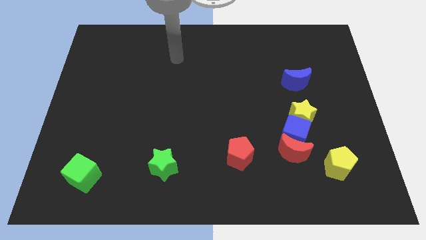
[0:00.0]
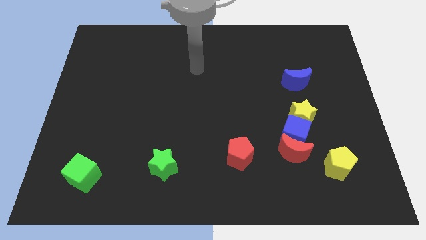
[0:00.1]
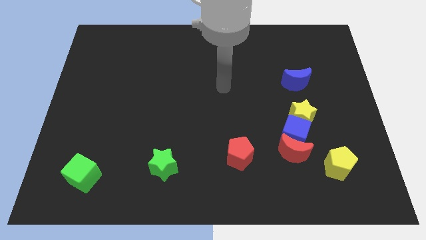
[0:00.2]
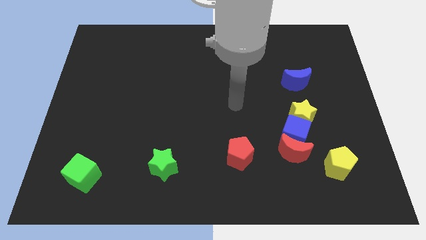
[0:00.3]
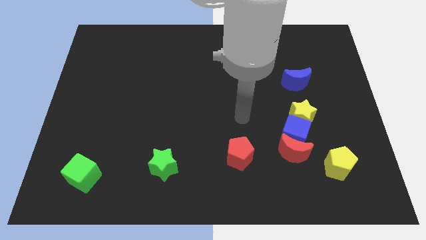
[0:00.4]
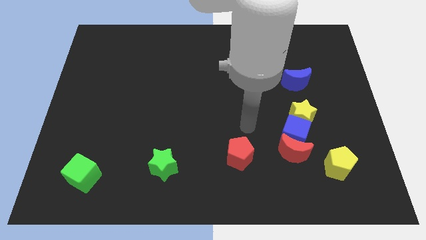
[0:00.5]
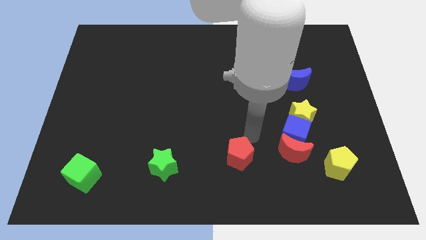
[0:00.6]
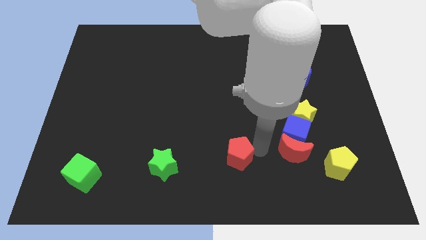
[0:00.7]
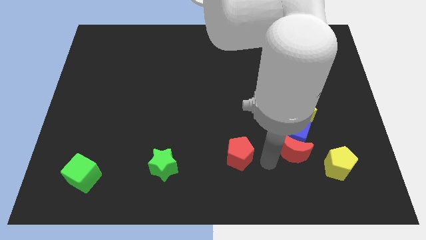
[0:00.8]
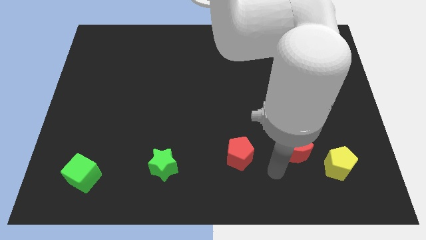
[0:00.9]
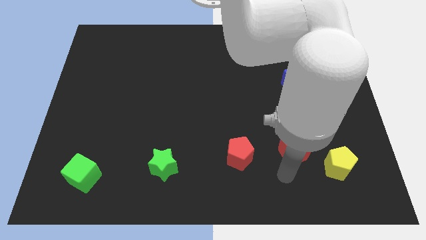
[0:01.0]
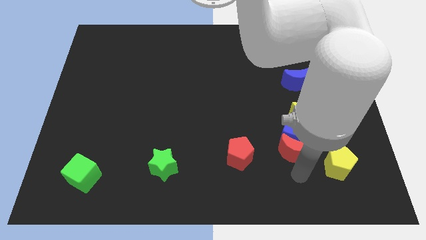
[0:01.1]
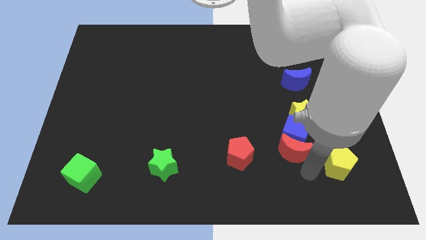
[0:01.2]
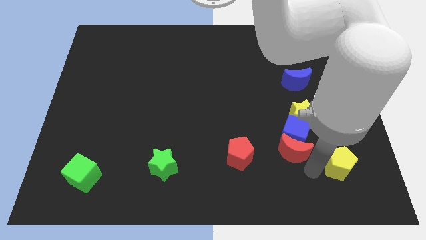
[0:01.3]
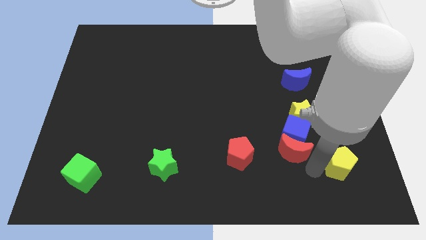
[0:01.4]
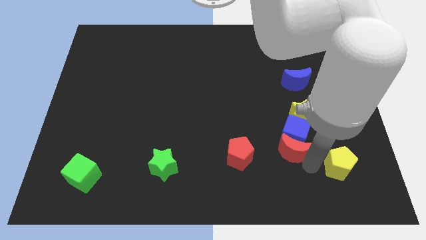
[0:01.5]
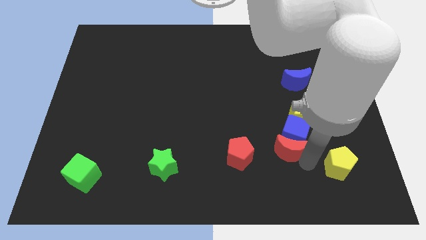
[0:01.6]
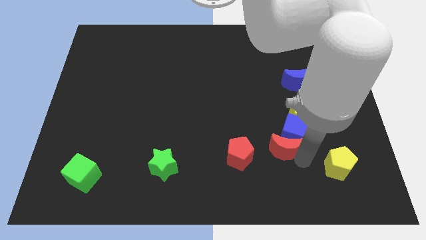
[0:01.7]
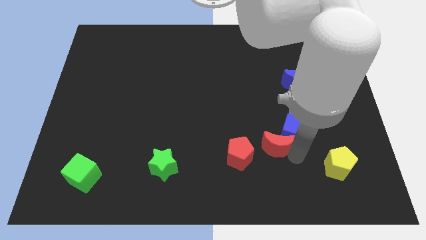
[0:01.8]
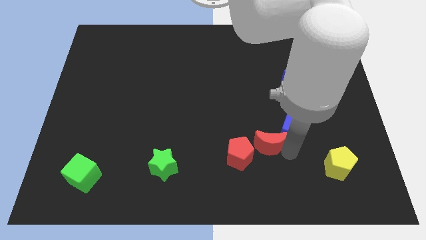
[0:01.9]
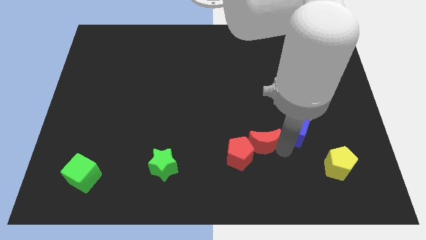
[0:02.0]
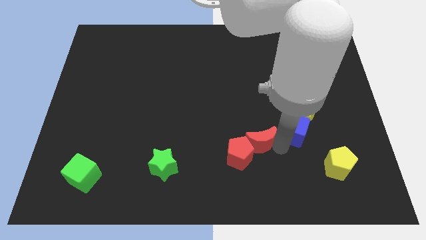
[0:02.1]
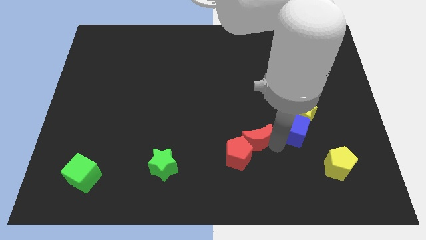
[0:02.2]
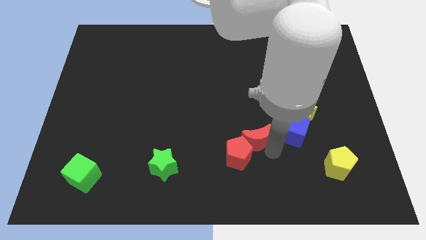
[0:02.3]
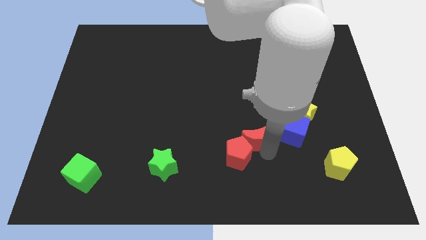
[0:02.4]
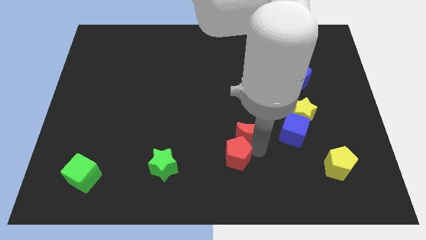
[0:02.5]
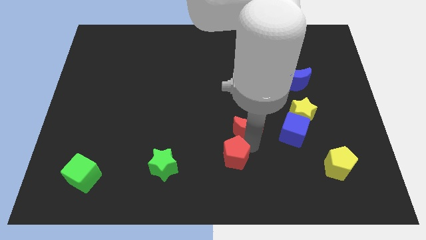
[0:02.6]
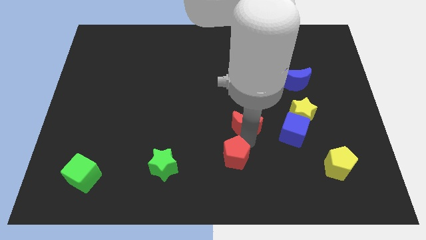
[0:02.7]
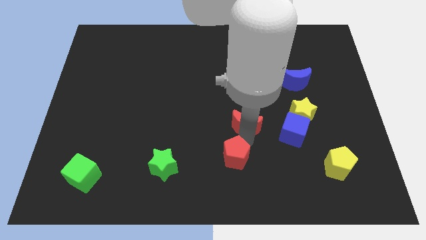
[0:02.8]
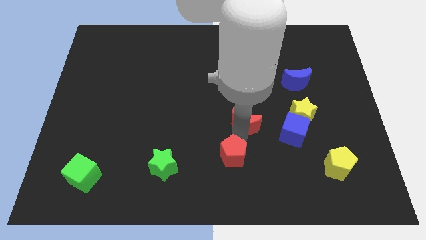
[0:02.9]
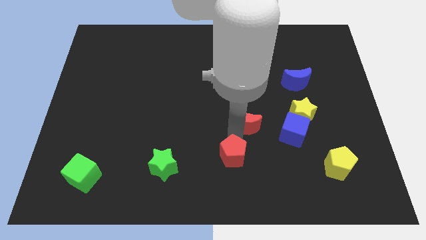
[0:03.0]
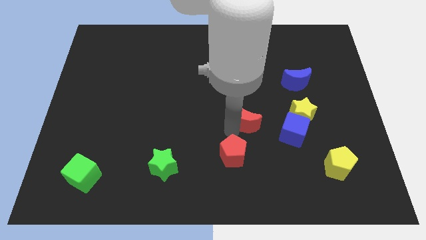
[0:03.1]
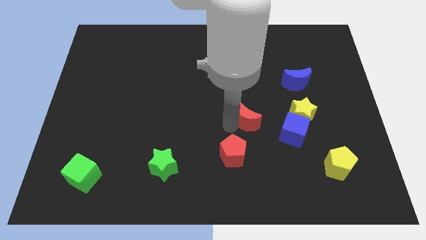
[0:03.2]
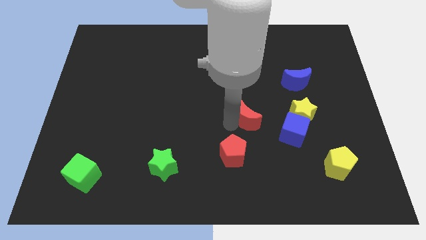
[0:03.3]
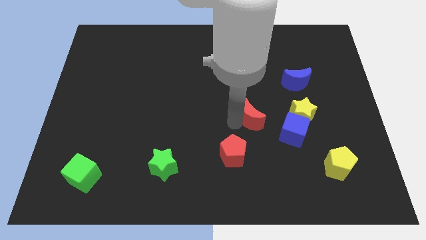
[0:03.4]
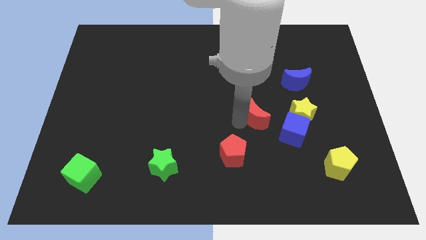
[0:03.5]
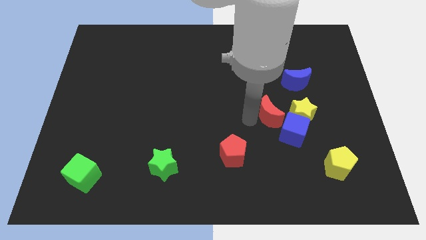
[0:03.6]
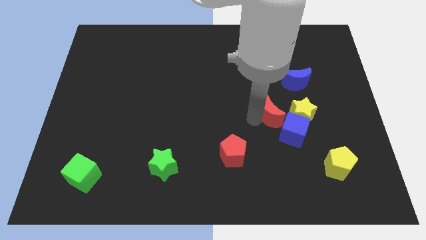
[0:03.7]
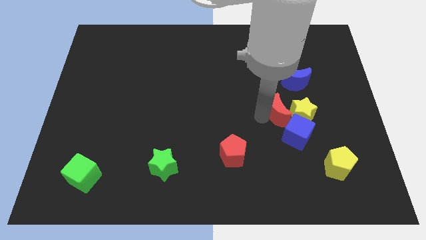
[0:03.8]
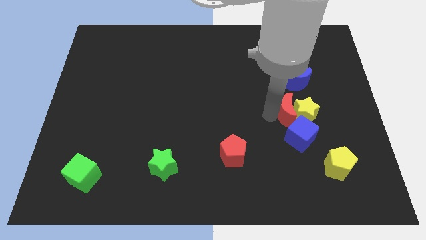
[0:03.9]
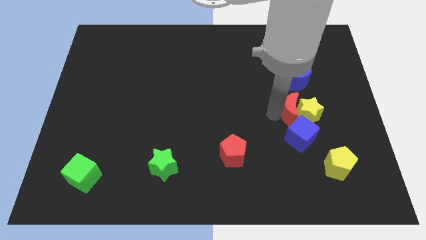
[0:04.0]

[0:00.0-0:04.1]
put the red moon to the yellow star

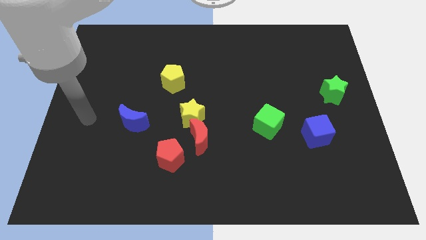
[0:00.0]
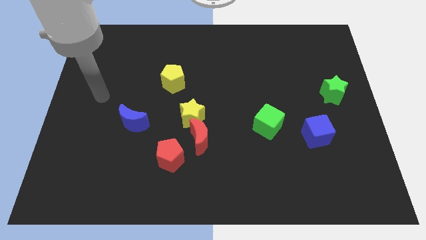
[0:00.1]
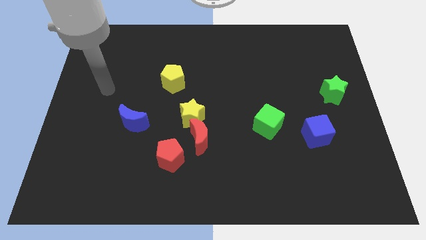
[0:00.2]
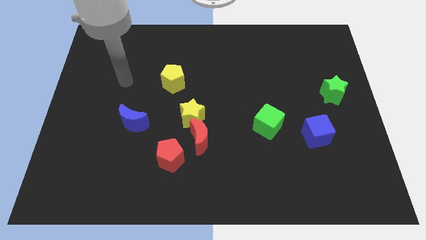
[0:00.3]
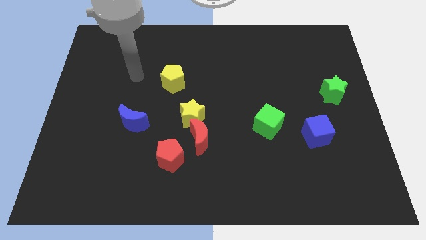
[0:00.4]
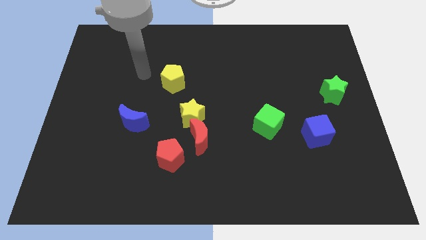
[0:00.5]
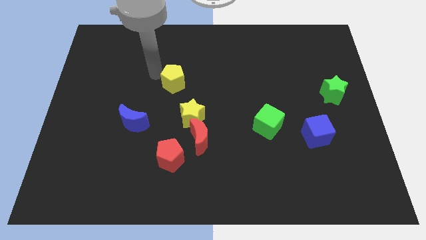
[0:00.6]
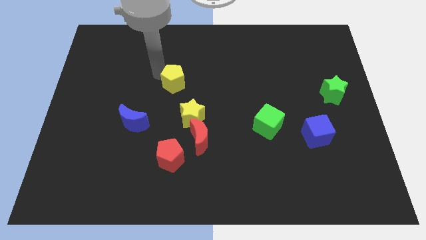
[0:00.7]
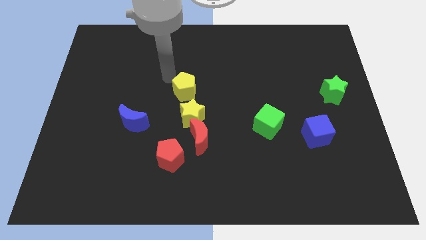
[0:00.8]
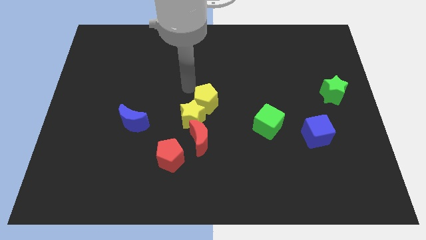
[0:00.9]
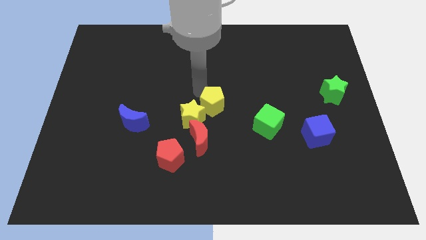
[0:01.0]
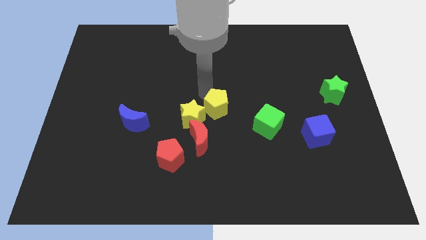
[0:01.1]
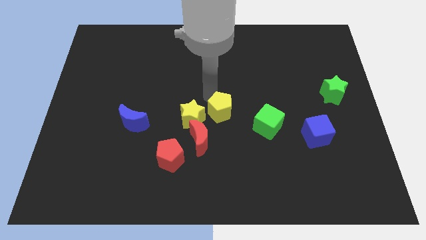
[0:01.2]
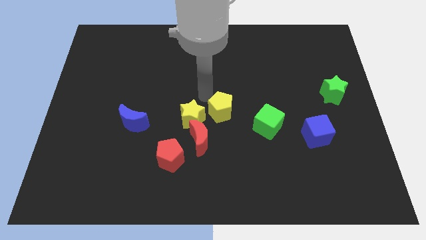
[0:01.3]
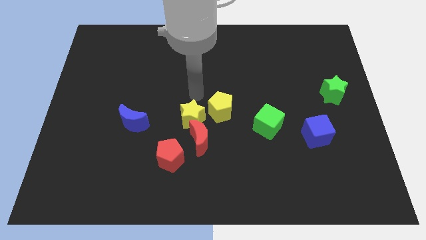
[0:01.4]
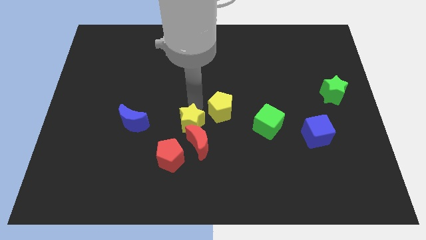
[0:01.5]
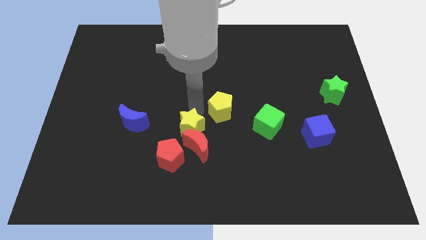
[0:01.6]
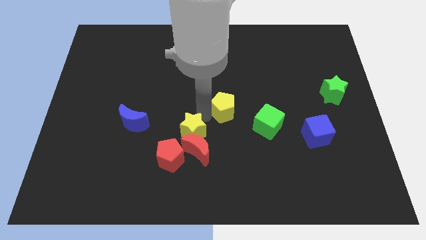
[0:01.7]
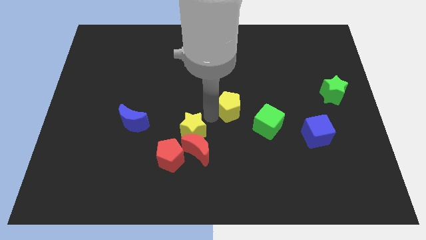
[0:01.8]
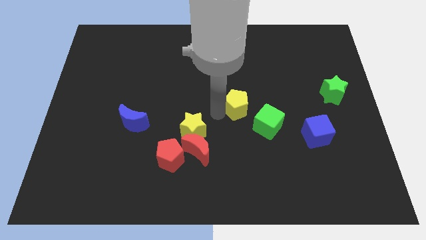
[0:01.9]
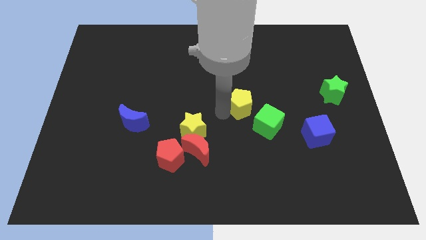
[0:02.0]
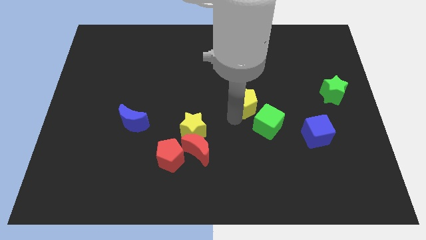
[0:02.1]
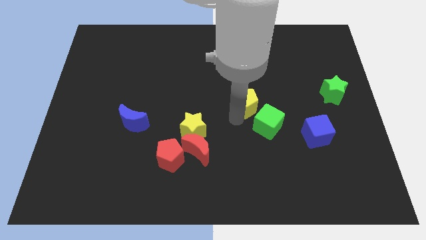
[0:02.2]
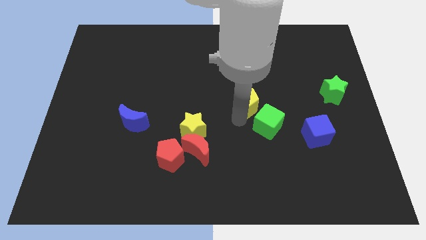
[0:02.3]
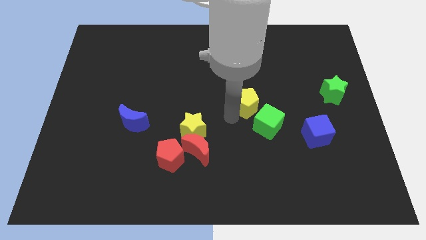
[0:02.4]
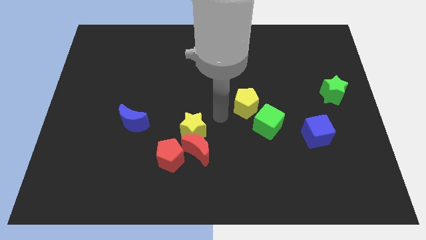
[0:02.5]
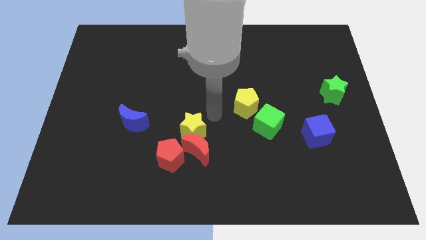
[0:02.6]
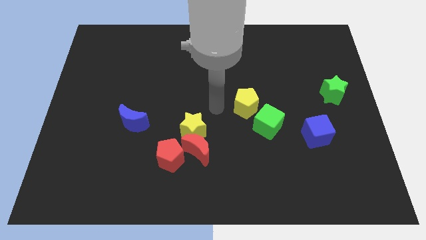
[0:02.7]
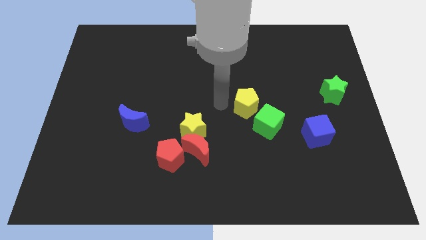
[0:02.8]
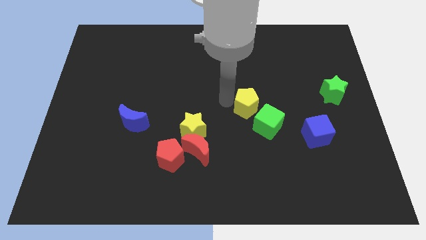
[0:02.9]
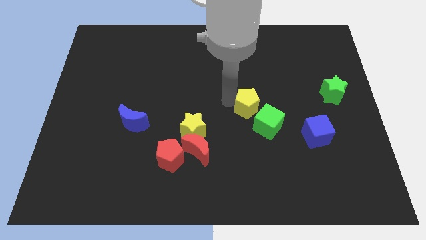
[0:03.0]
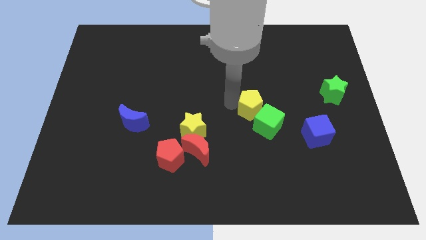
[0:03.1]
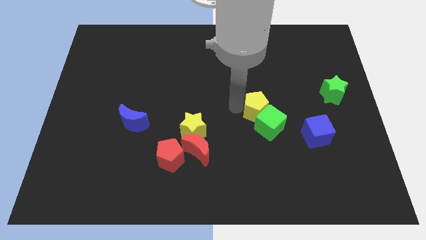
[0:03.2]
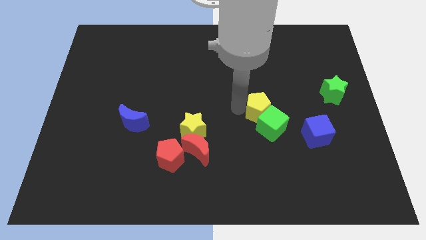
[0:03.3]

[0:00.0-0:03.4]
move the yellow pentagon close to the green cube

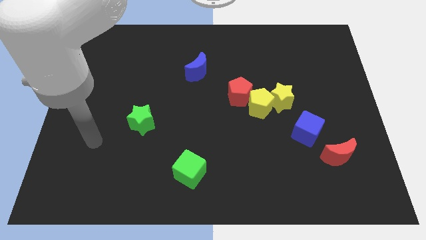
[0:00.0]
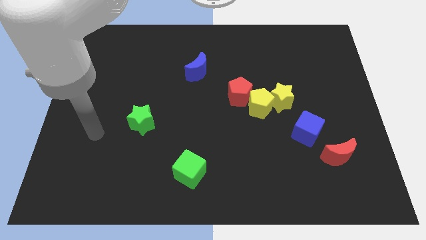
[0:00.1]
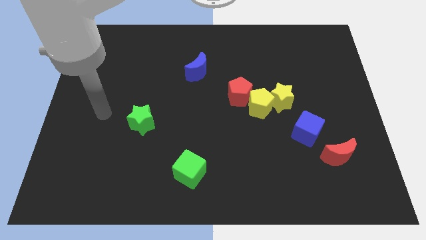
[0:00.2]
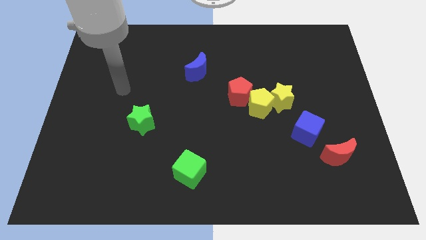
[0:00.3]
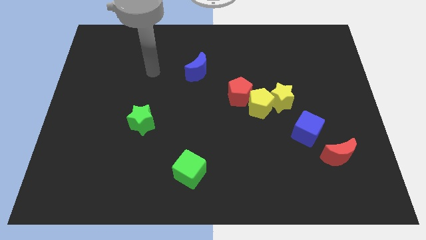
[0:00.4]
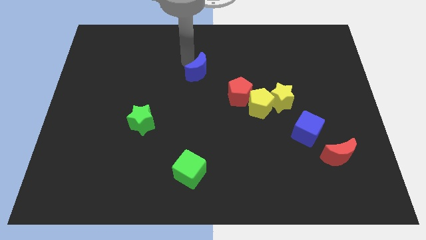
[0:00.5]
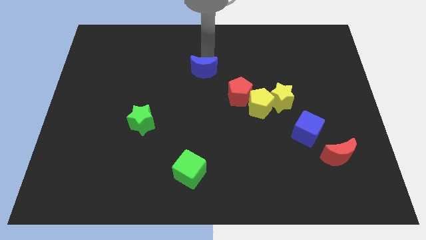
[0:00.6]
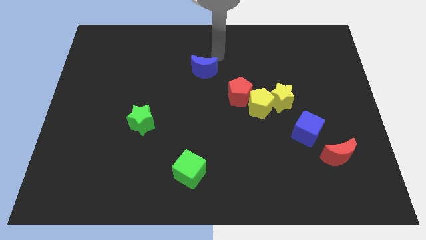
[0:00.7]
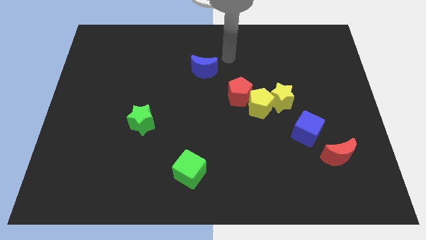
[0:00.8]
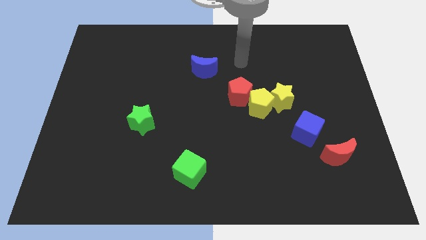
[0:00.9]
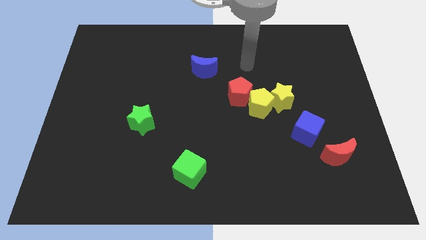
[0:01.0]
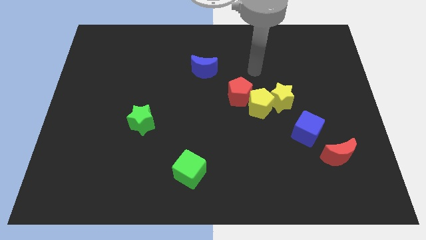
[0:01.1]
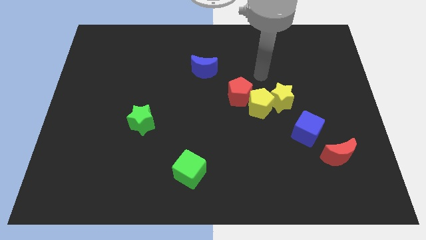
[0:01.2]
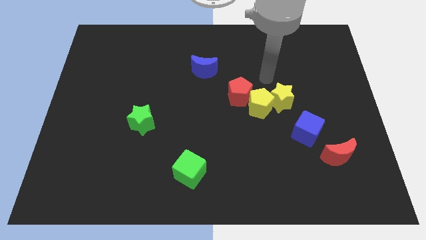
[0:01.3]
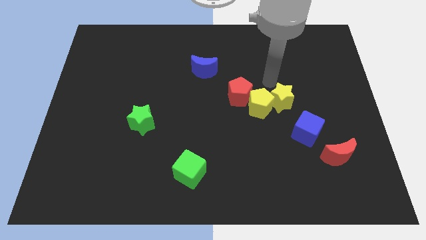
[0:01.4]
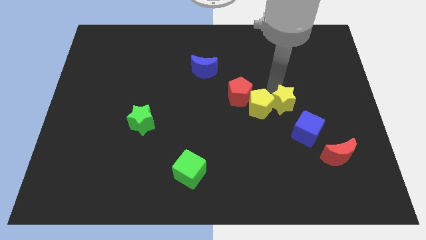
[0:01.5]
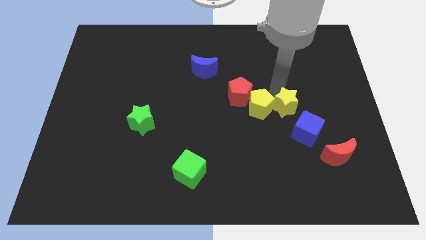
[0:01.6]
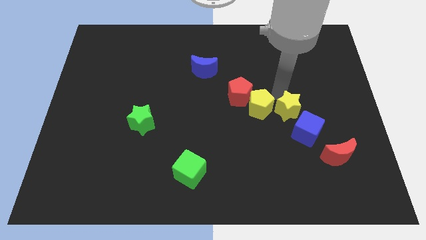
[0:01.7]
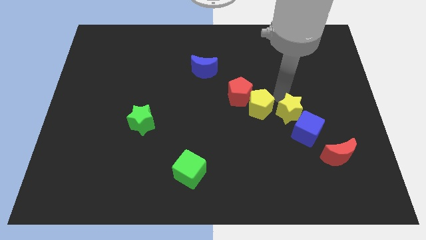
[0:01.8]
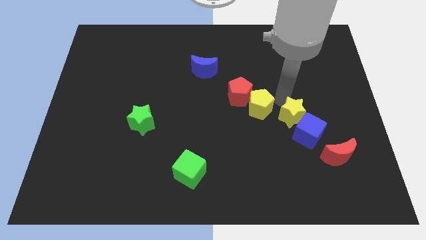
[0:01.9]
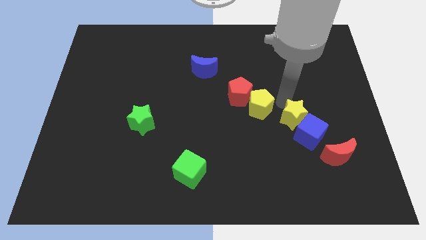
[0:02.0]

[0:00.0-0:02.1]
move the yellow star close to the blue cube
